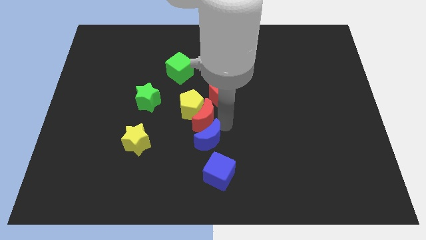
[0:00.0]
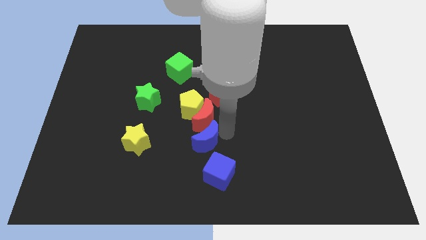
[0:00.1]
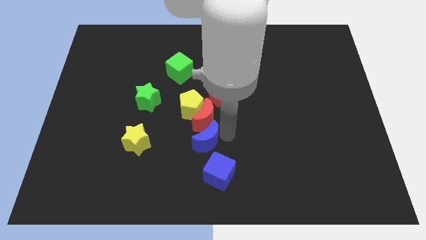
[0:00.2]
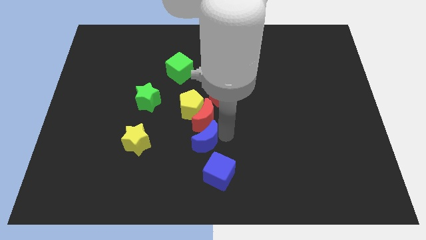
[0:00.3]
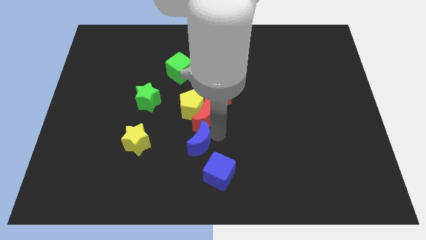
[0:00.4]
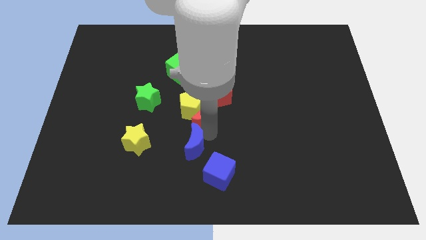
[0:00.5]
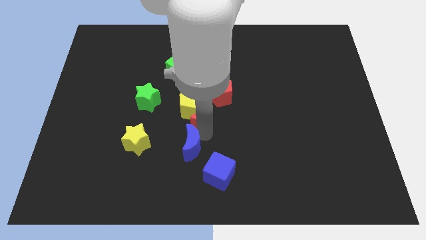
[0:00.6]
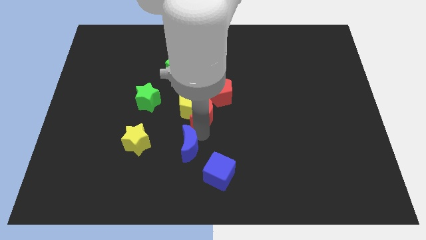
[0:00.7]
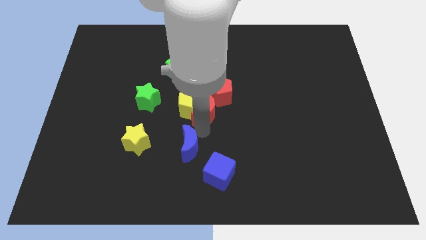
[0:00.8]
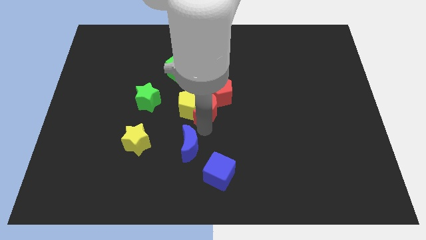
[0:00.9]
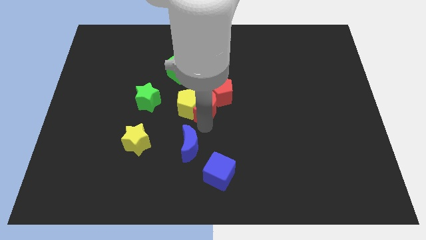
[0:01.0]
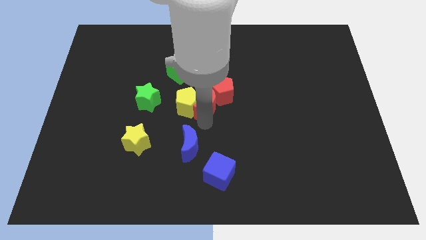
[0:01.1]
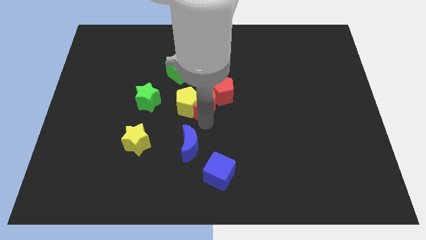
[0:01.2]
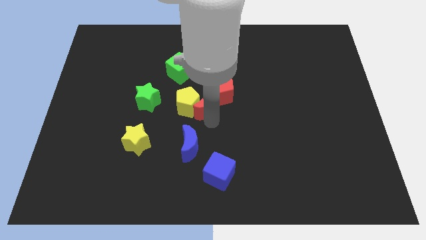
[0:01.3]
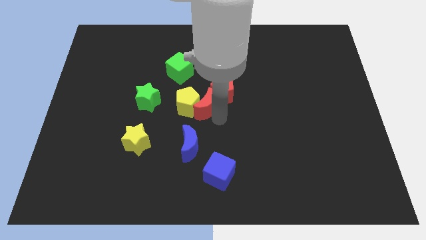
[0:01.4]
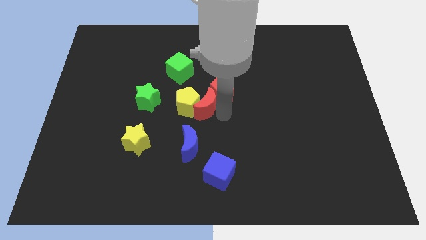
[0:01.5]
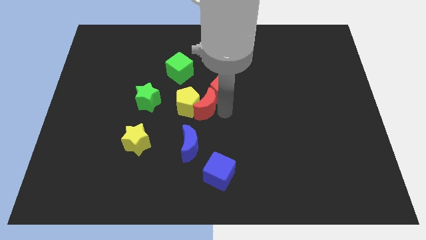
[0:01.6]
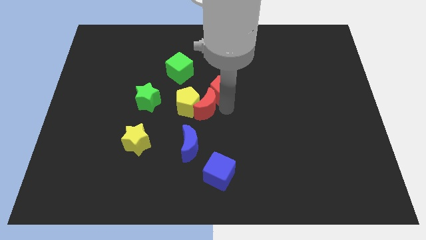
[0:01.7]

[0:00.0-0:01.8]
push the red crescent and yellow pentagon towards the green star

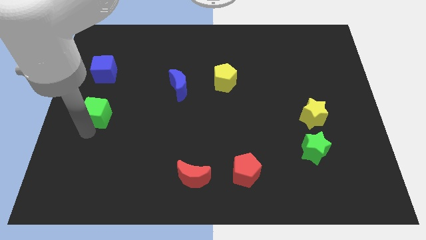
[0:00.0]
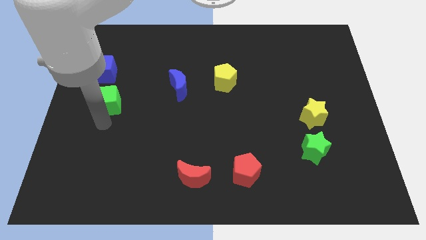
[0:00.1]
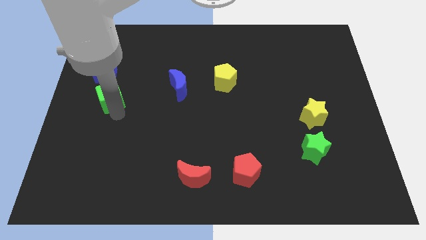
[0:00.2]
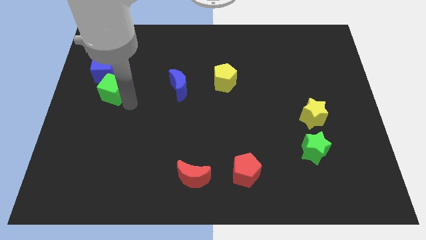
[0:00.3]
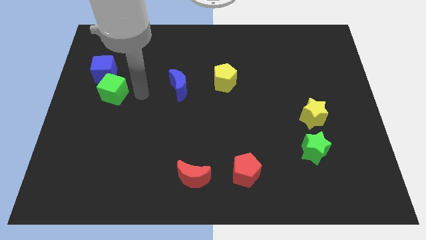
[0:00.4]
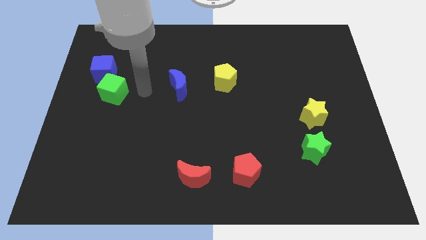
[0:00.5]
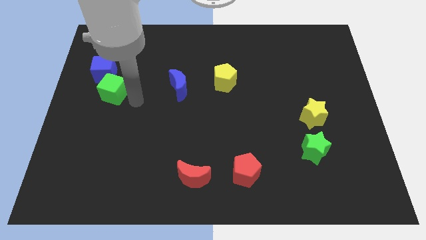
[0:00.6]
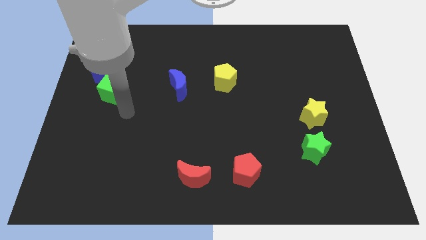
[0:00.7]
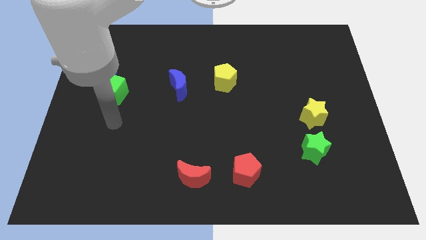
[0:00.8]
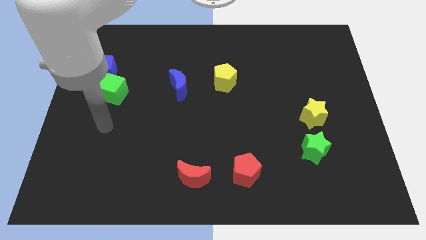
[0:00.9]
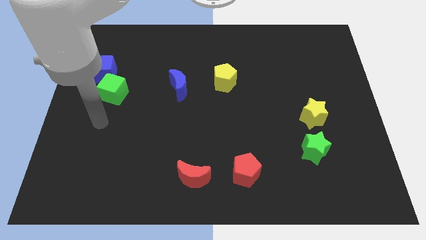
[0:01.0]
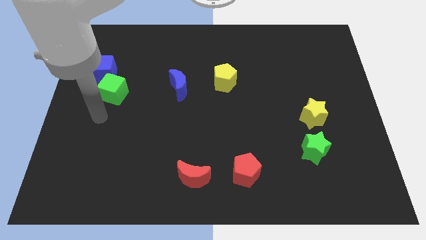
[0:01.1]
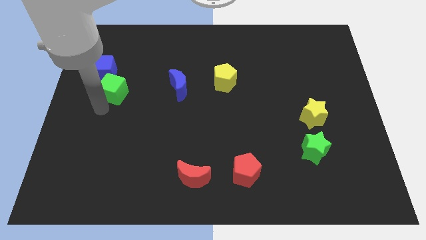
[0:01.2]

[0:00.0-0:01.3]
push green cube towards blue cube

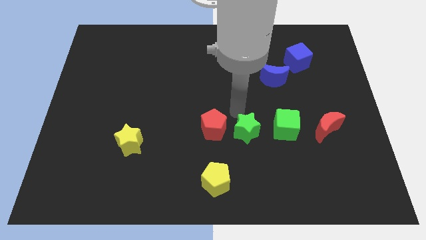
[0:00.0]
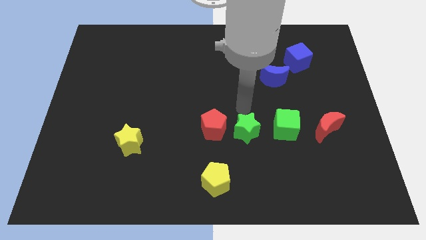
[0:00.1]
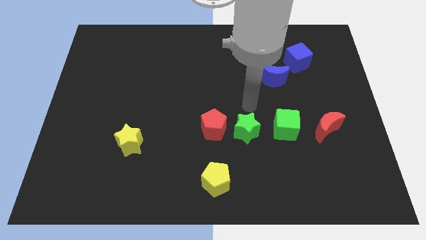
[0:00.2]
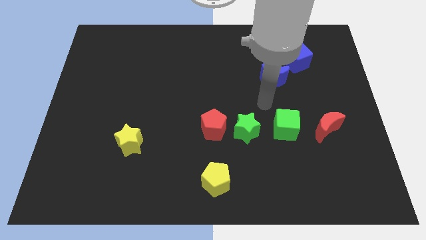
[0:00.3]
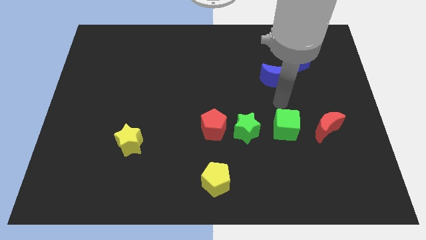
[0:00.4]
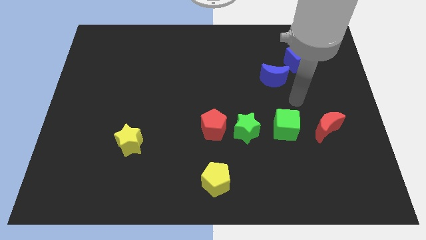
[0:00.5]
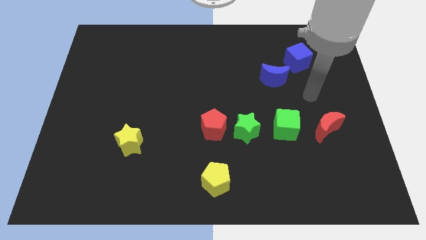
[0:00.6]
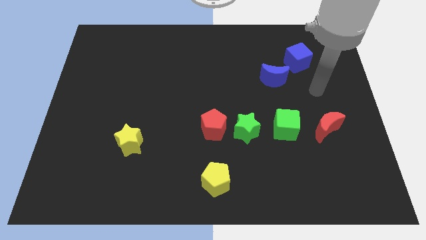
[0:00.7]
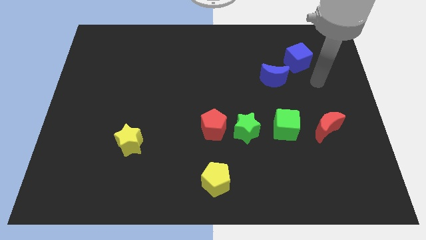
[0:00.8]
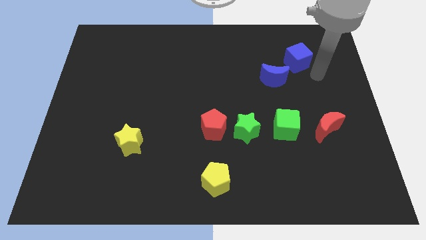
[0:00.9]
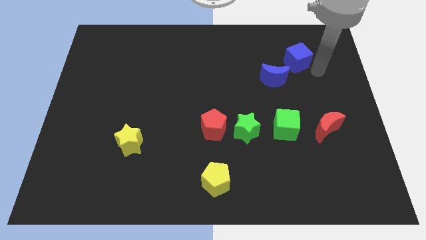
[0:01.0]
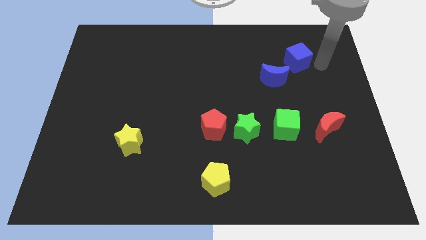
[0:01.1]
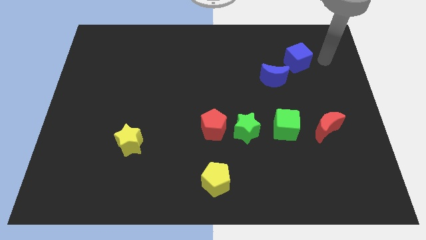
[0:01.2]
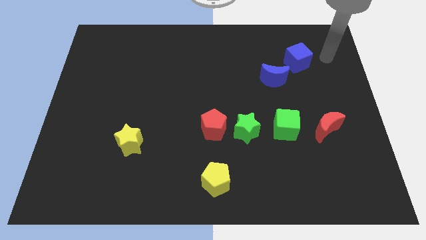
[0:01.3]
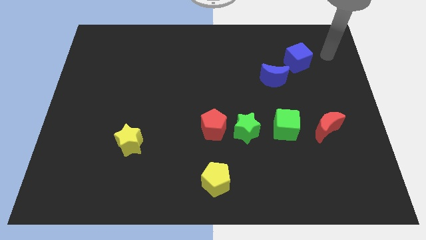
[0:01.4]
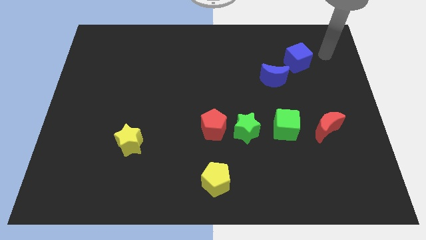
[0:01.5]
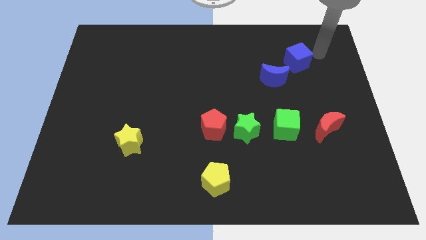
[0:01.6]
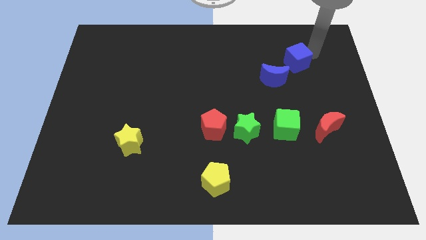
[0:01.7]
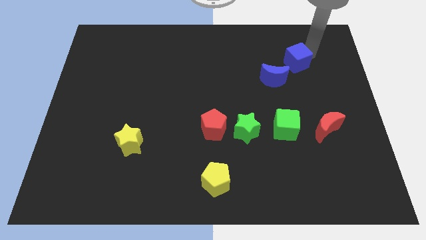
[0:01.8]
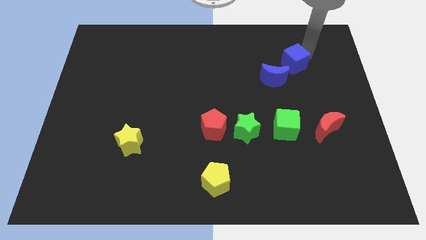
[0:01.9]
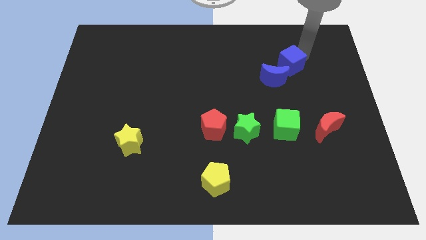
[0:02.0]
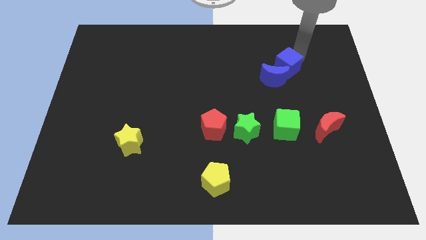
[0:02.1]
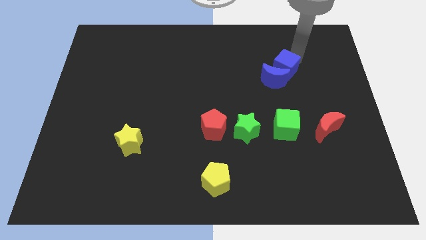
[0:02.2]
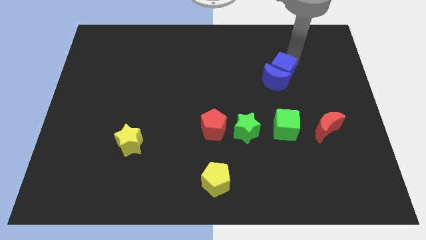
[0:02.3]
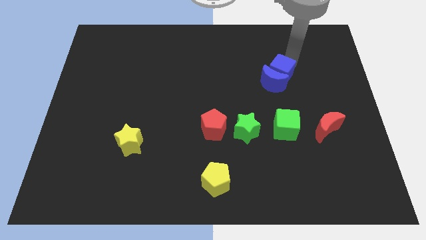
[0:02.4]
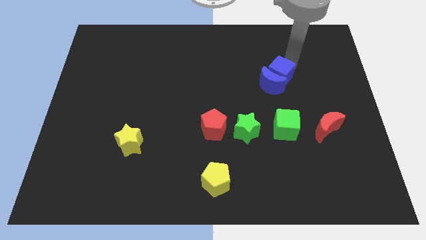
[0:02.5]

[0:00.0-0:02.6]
slightly push the blue cube towards the blue crescent

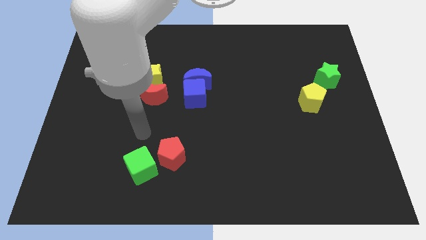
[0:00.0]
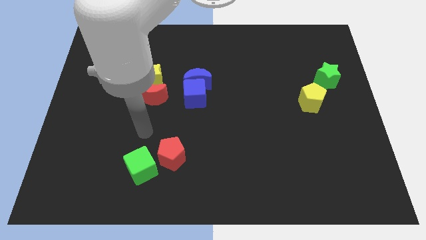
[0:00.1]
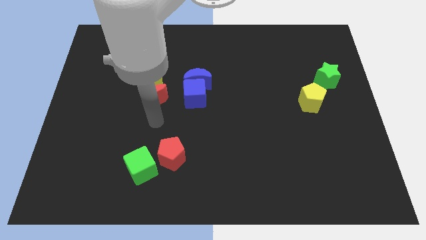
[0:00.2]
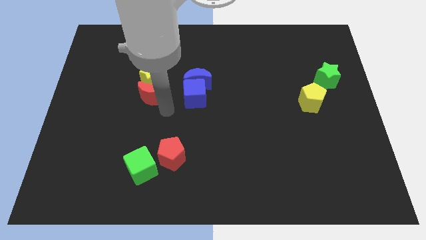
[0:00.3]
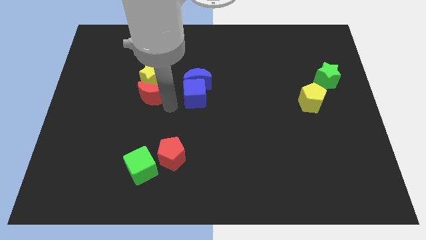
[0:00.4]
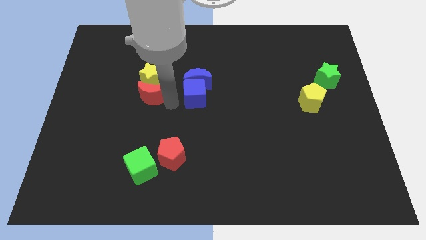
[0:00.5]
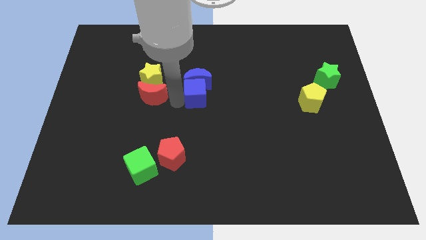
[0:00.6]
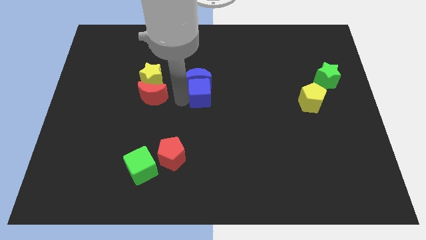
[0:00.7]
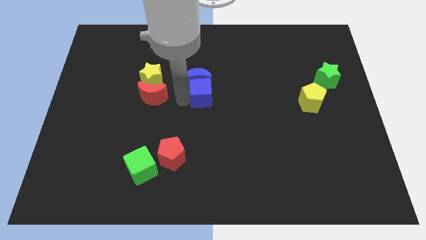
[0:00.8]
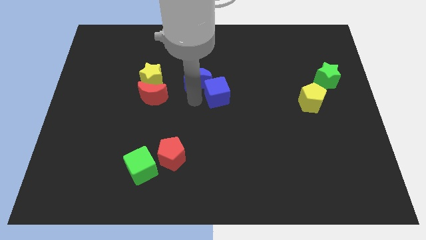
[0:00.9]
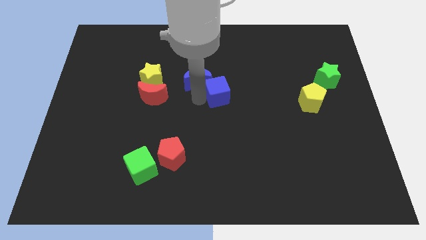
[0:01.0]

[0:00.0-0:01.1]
slightly move the blue cube to the right side

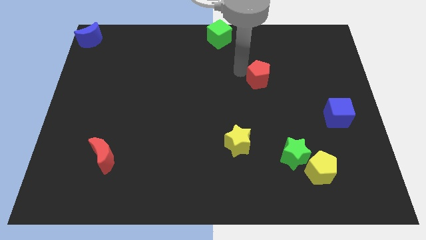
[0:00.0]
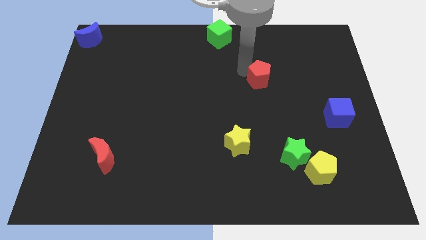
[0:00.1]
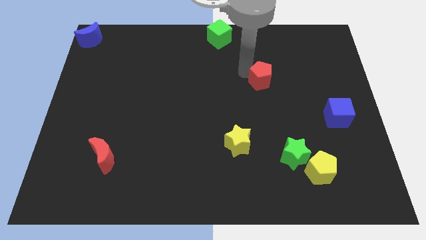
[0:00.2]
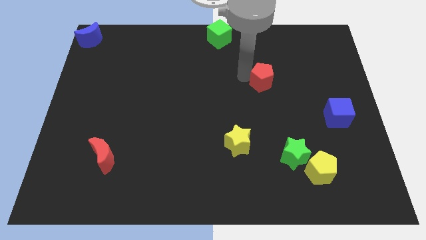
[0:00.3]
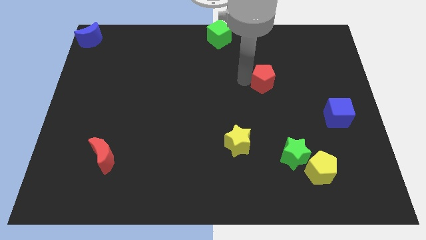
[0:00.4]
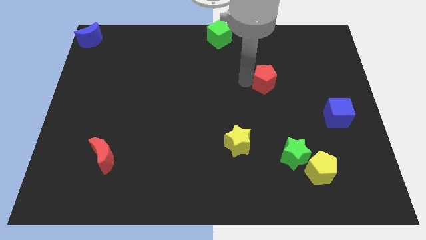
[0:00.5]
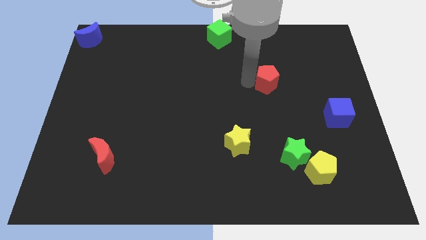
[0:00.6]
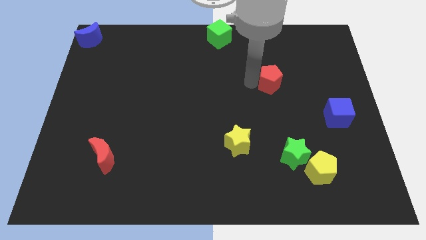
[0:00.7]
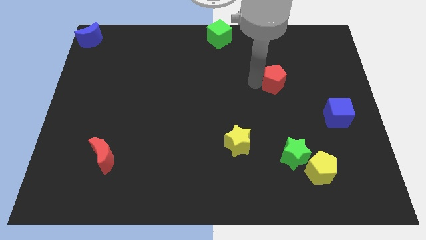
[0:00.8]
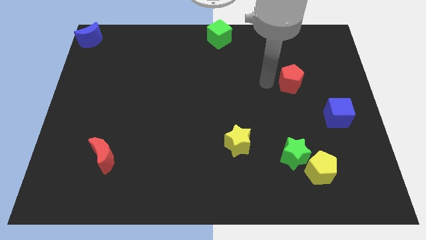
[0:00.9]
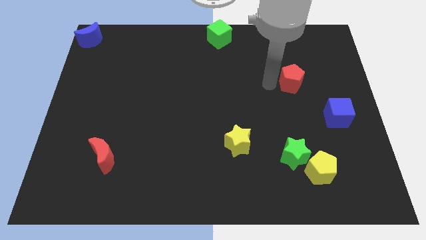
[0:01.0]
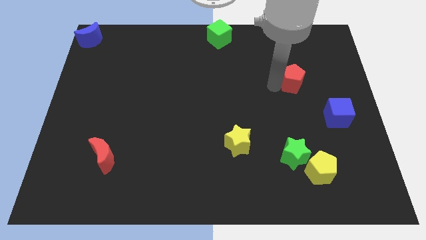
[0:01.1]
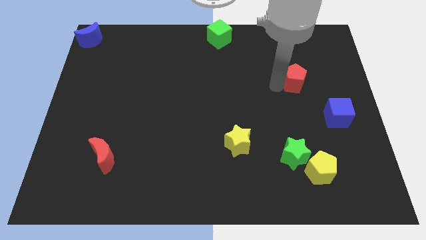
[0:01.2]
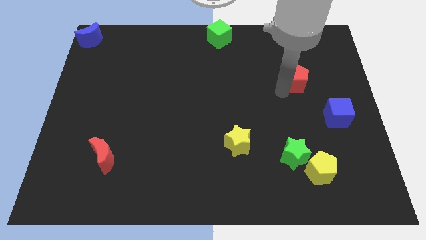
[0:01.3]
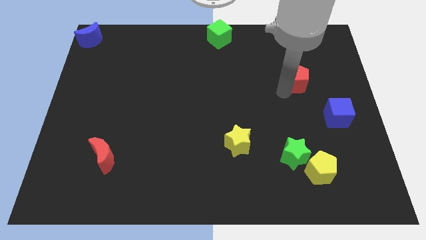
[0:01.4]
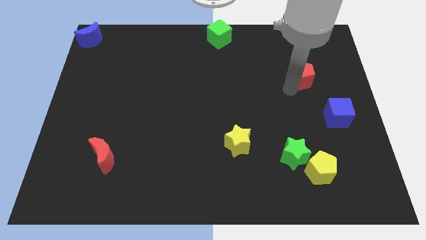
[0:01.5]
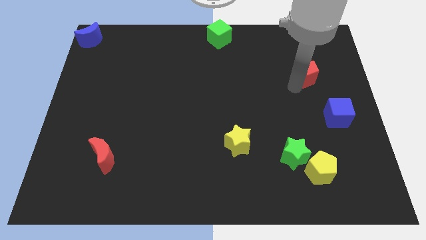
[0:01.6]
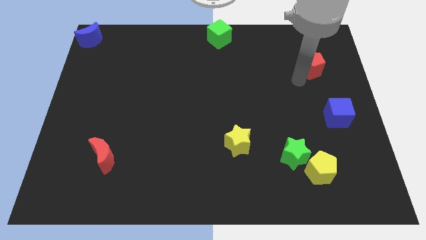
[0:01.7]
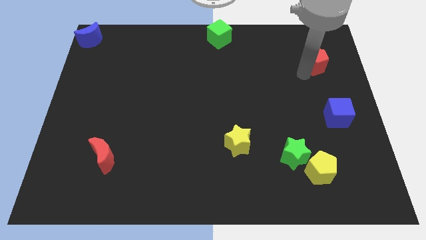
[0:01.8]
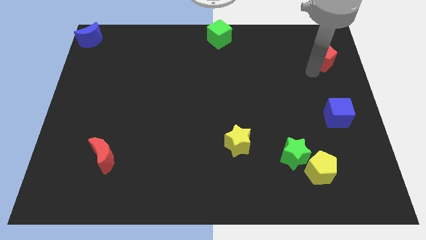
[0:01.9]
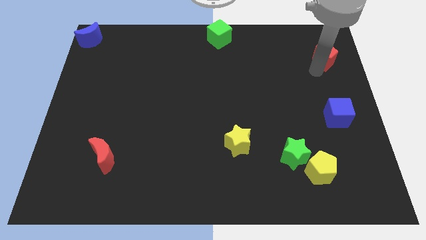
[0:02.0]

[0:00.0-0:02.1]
push the red pentagon towards the top right of the board
